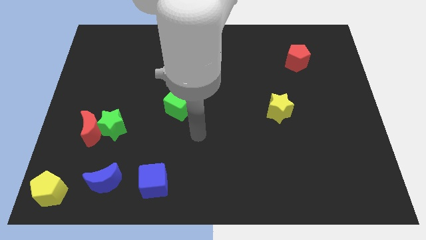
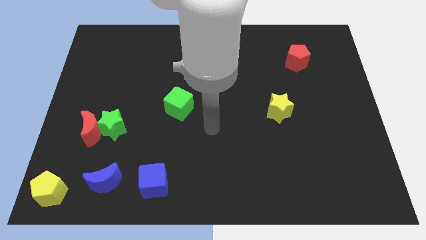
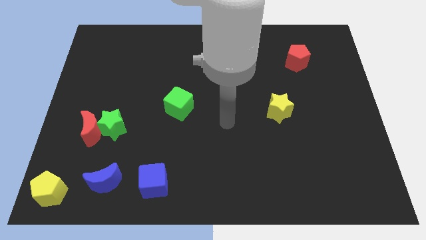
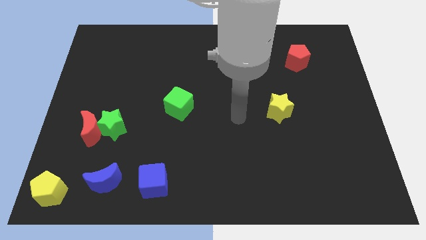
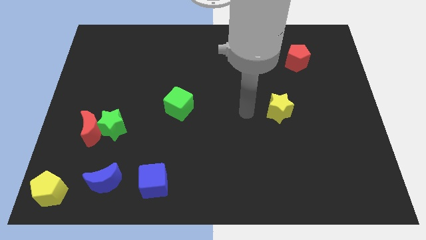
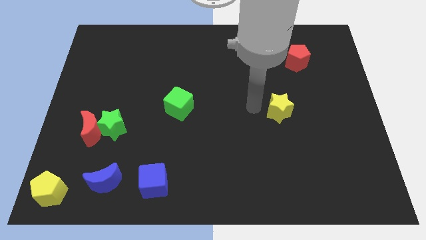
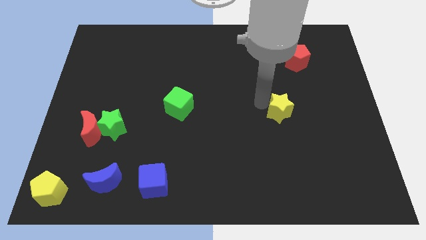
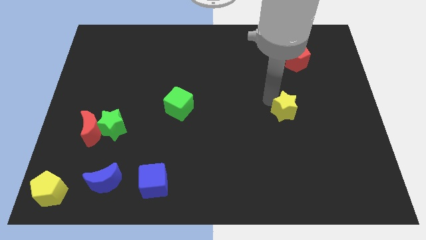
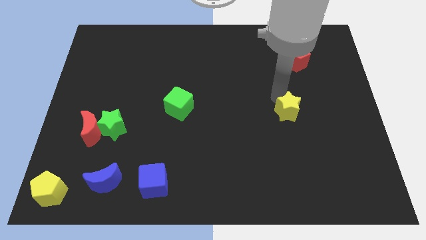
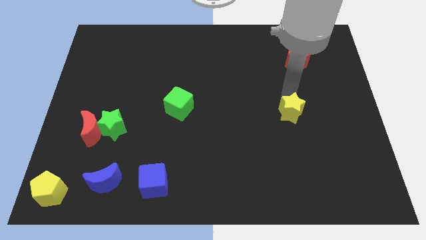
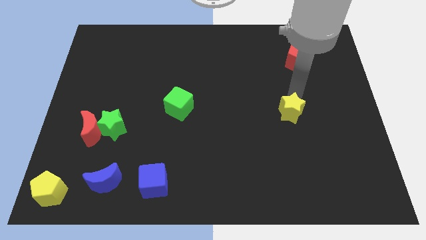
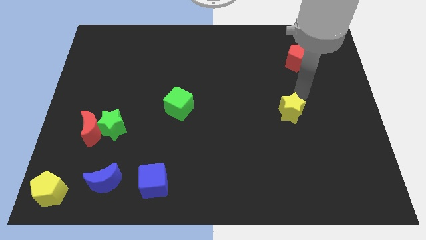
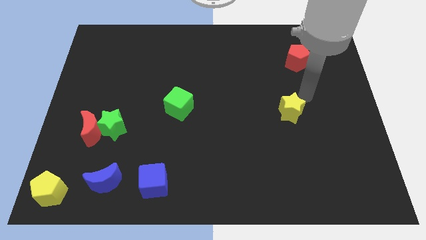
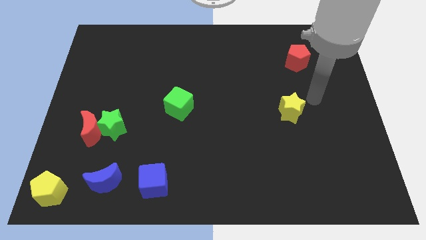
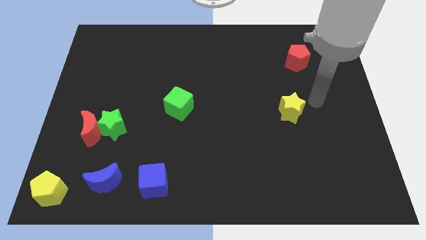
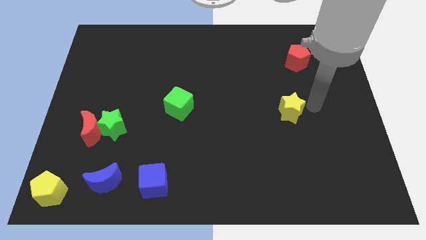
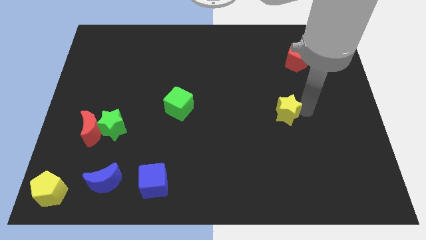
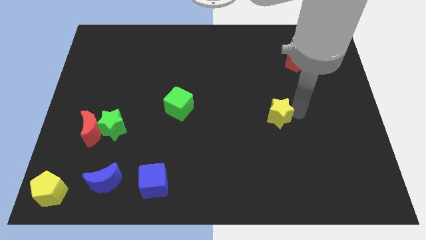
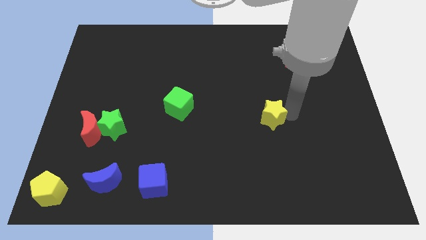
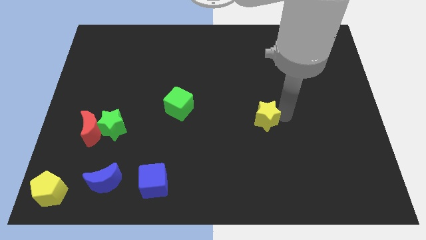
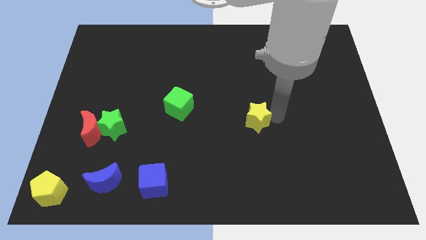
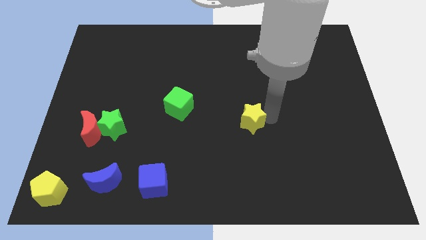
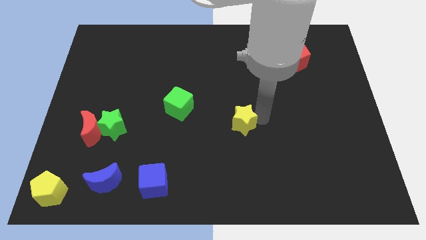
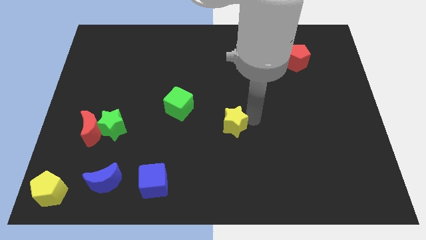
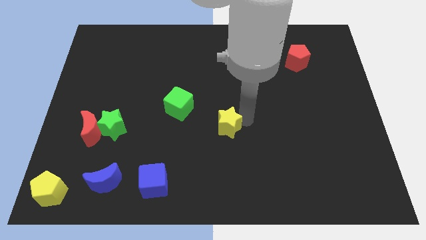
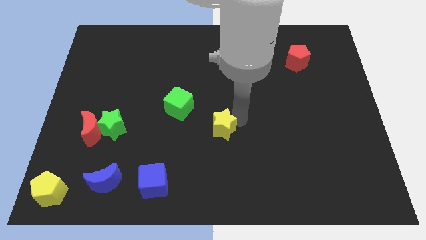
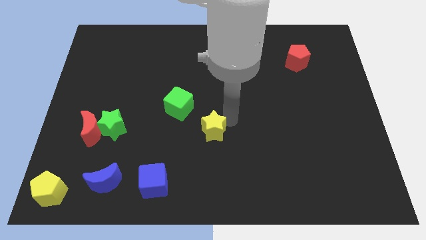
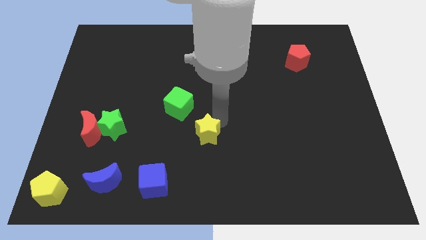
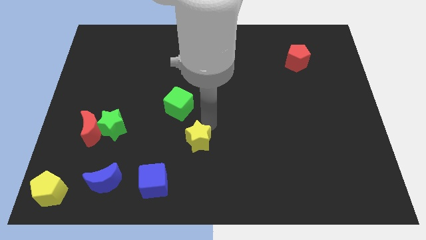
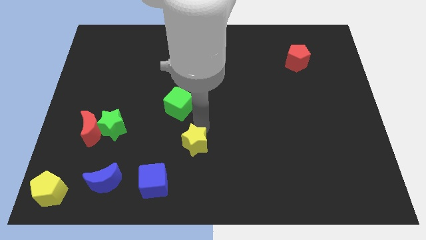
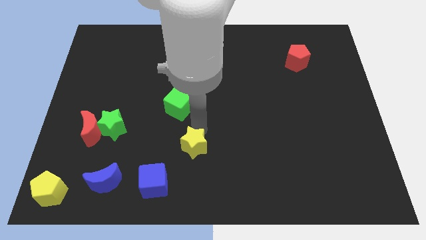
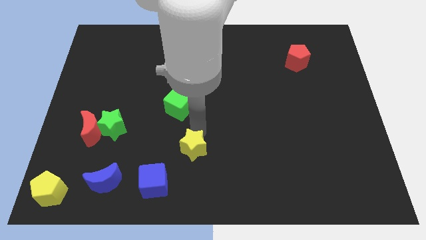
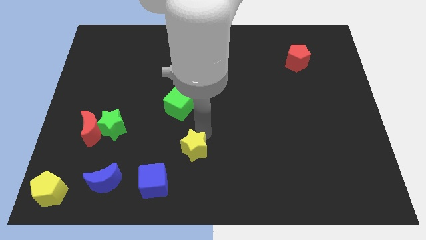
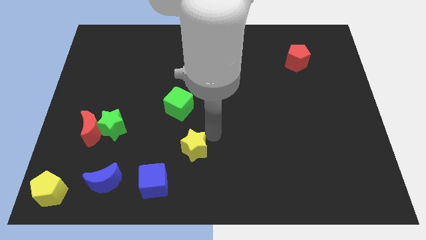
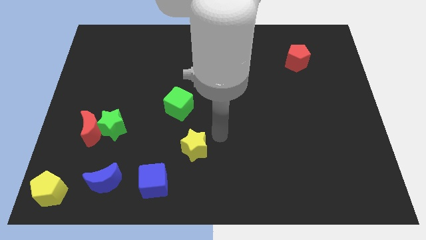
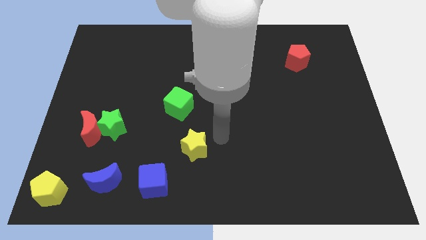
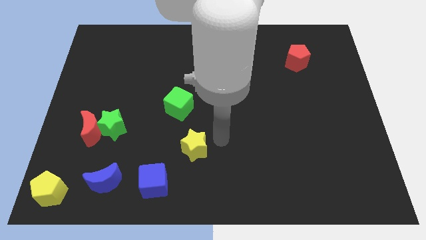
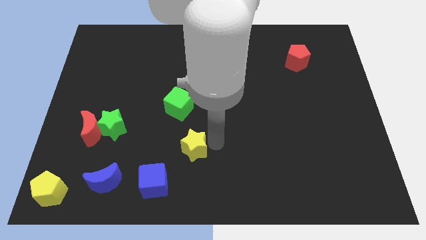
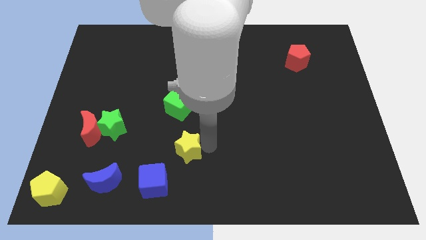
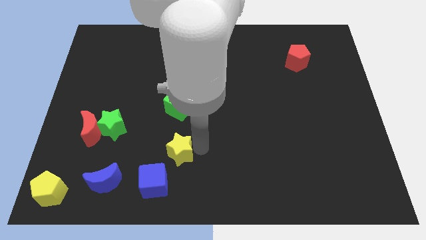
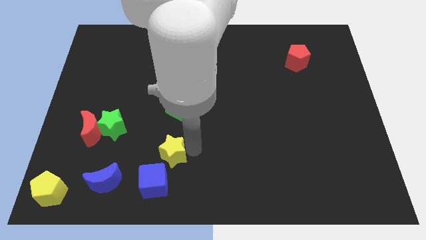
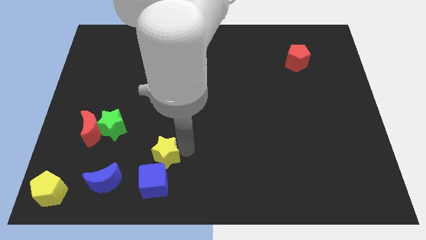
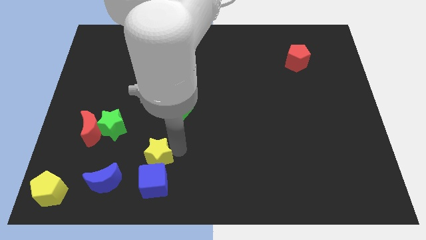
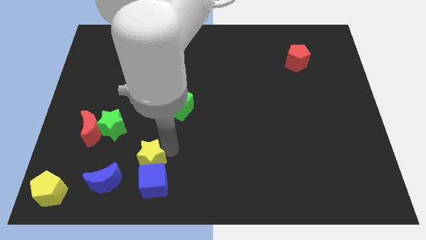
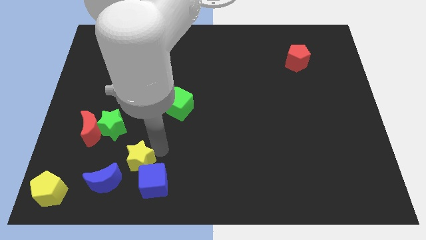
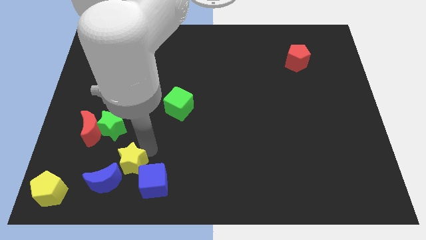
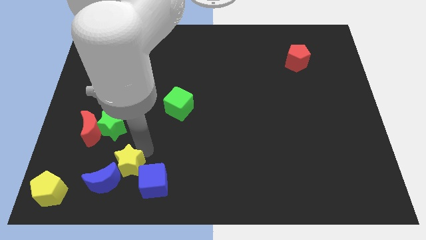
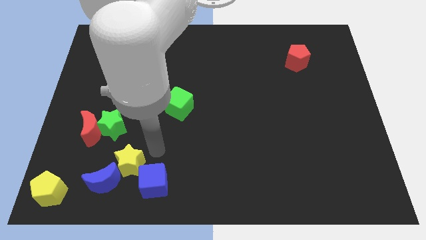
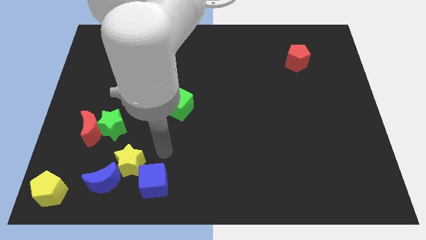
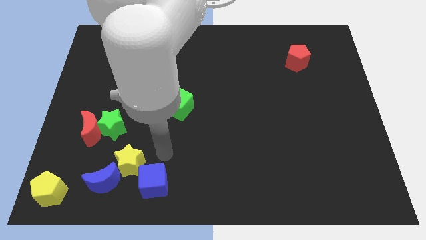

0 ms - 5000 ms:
push the yellow star into the blue crescent

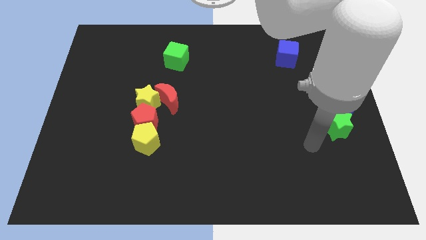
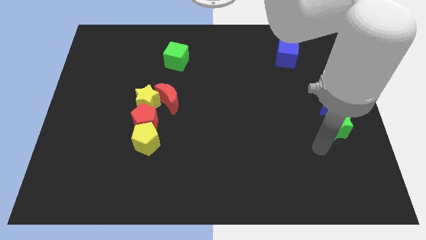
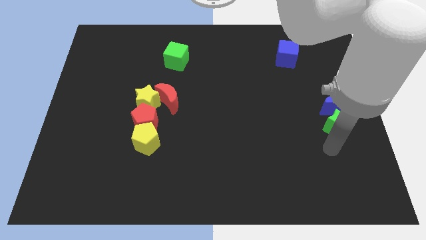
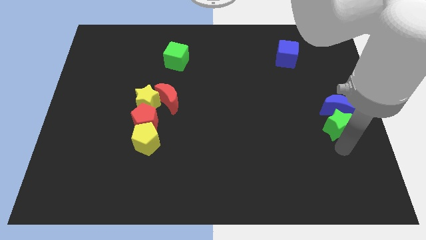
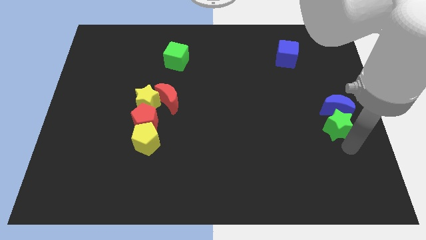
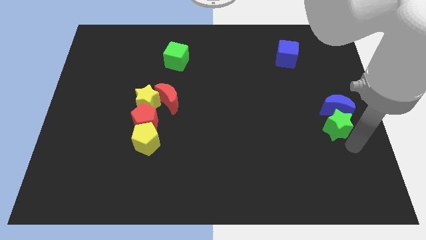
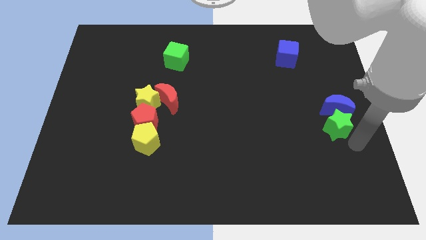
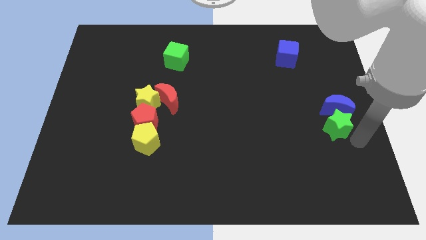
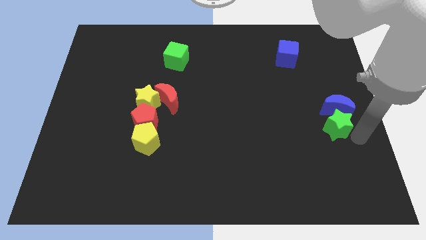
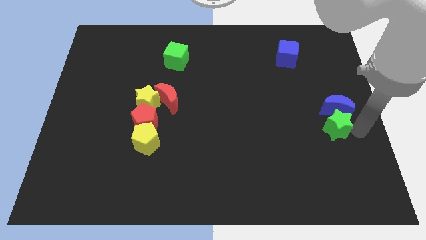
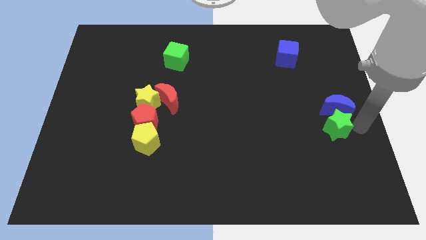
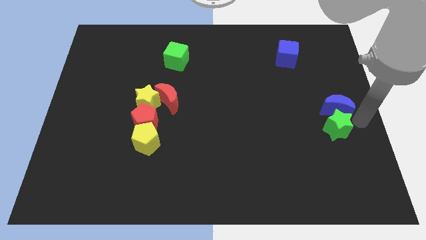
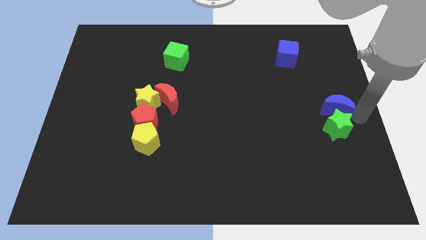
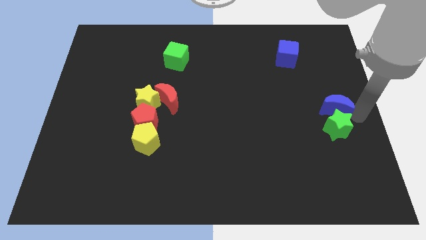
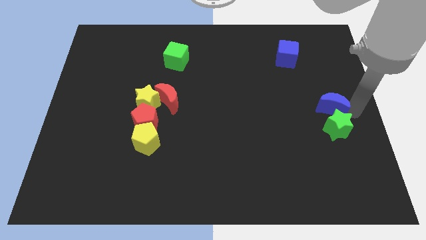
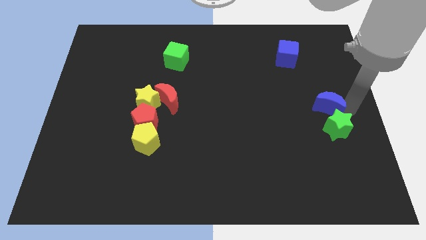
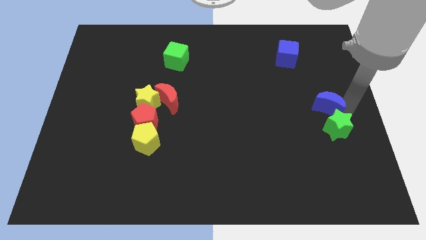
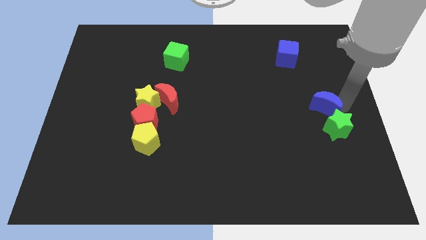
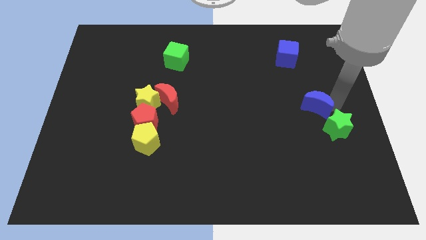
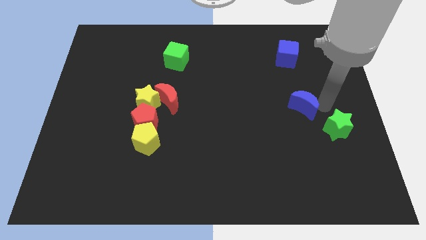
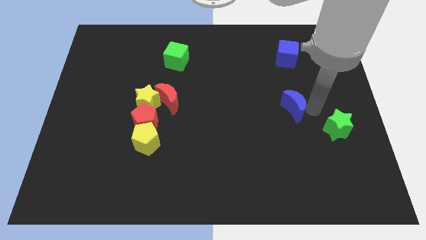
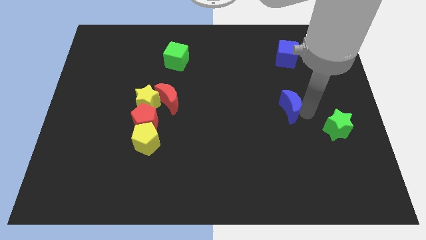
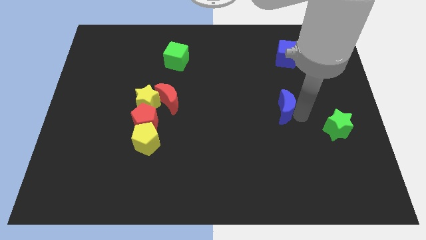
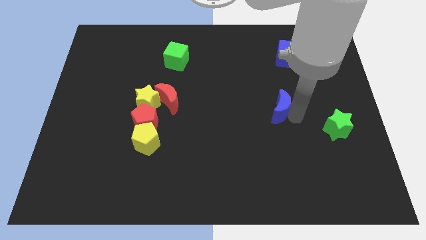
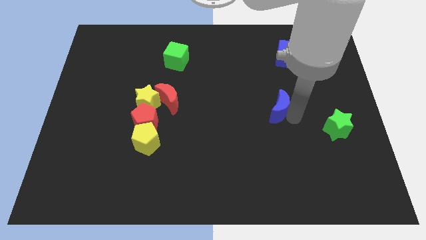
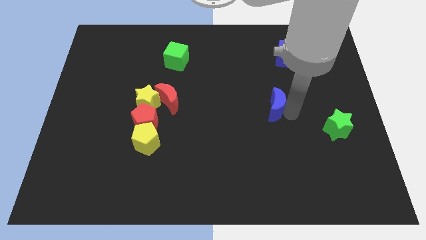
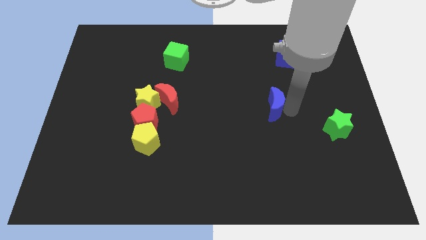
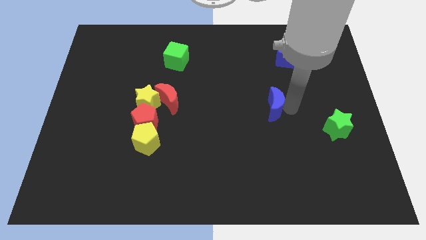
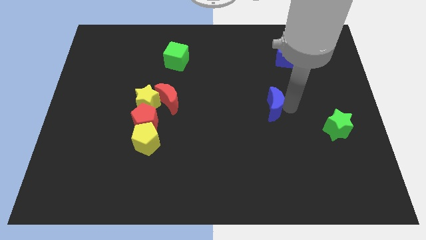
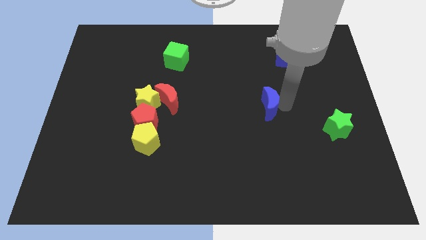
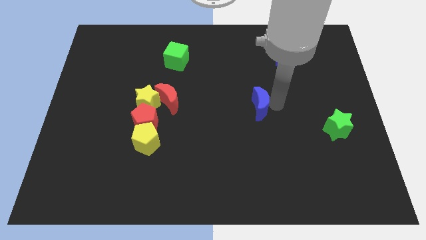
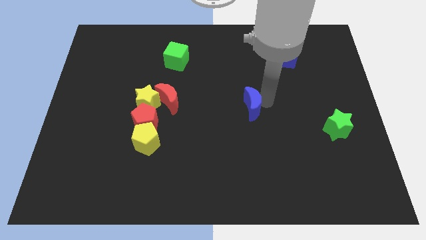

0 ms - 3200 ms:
separate the blue moon from the green star

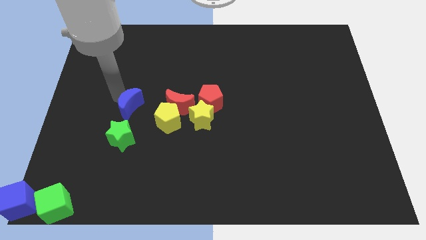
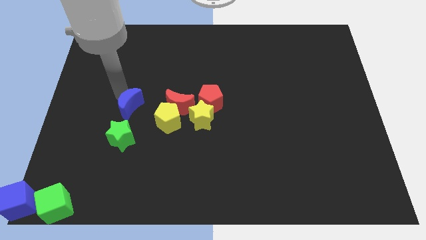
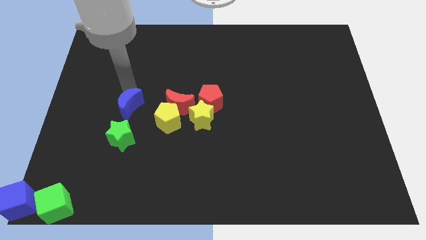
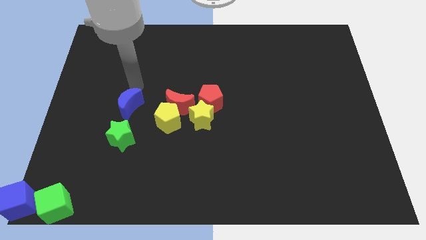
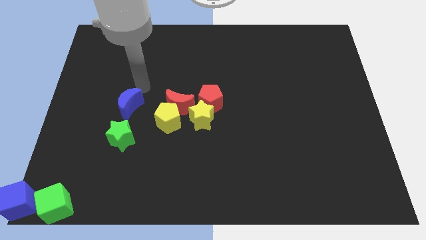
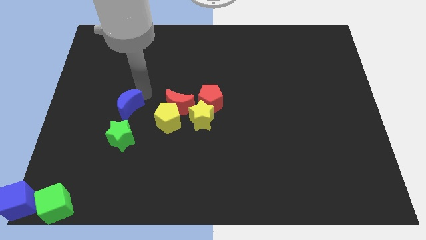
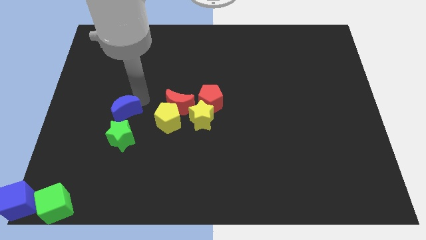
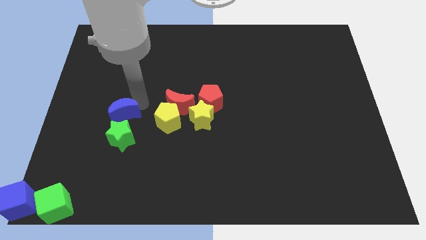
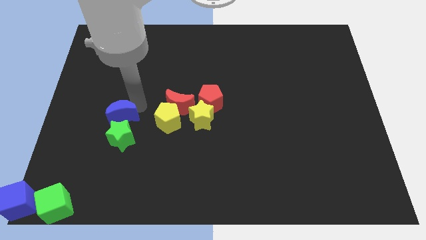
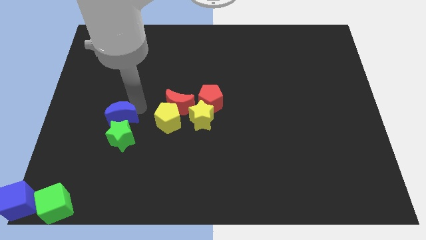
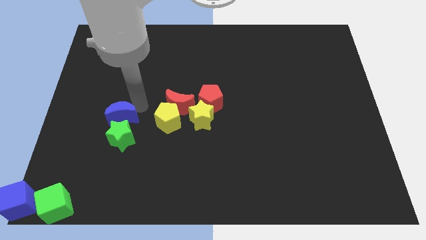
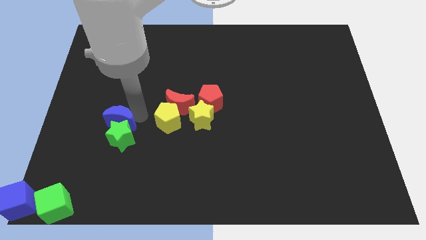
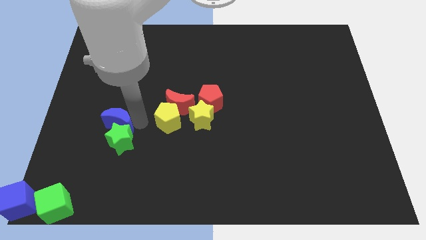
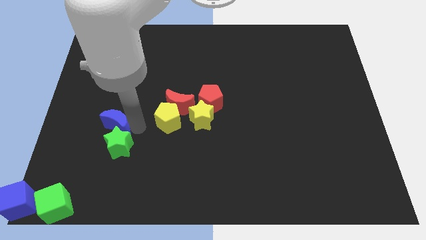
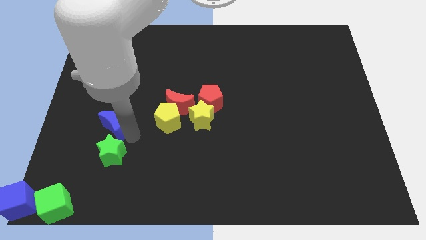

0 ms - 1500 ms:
push the blue crescent into green star
